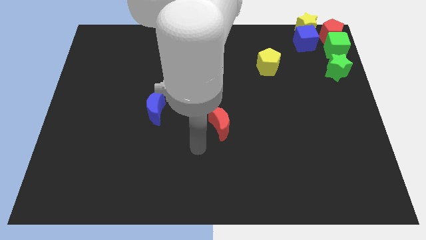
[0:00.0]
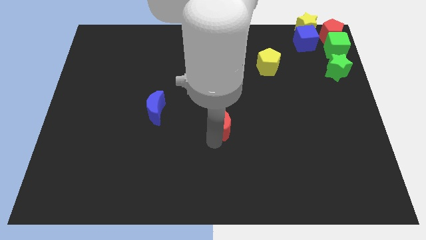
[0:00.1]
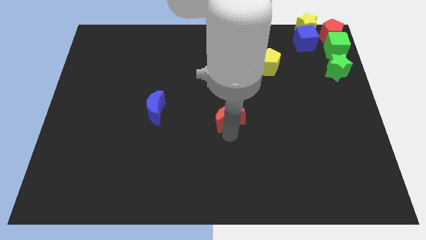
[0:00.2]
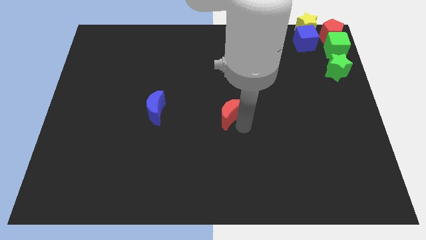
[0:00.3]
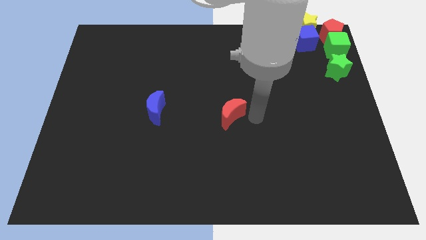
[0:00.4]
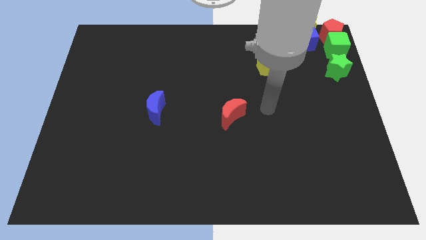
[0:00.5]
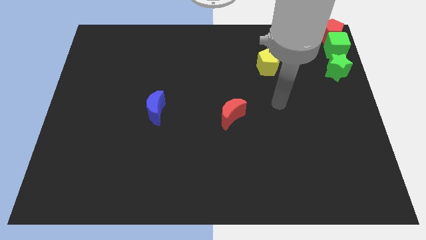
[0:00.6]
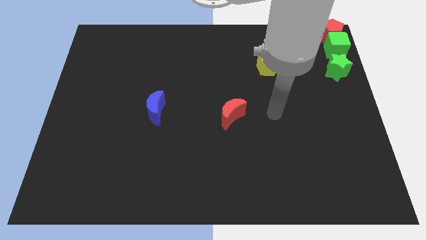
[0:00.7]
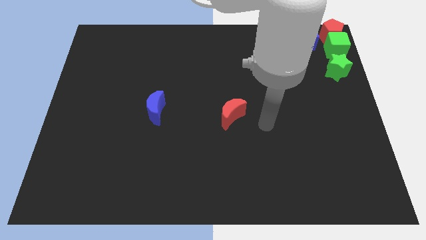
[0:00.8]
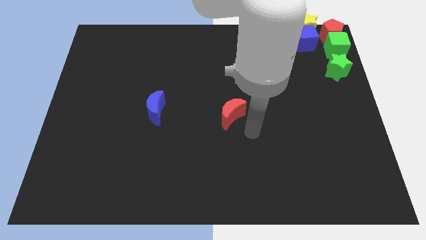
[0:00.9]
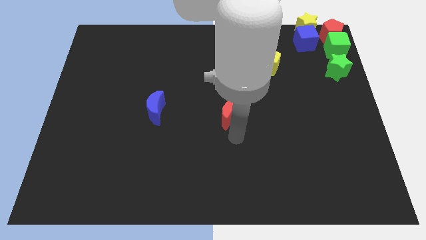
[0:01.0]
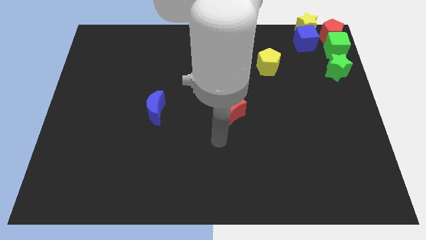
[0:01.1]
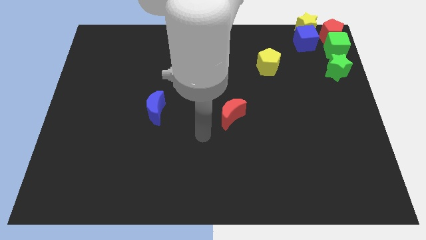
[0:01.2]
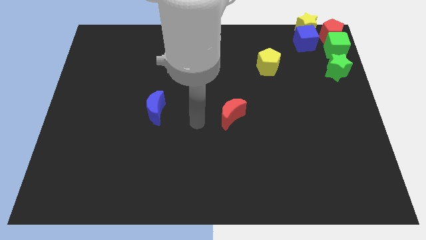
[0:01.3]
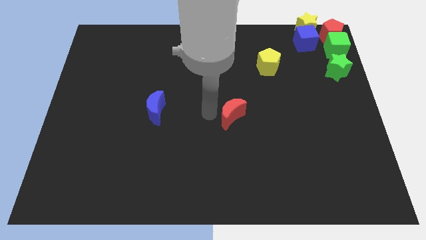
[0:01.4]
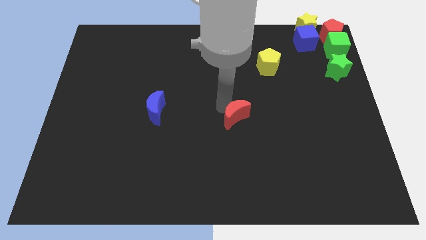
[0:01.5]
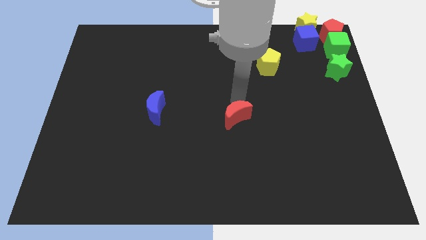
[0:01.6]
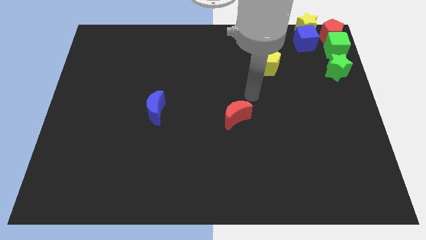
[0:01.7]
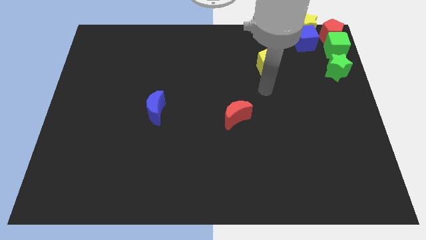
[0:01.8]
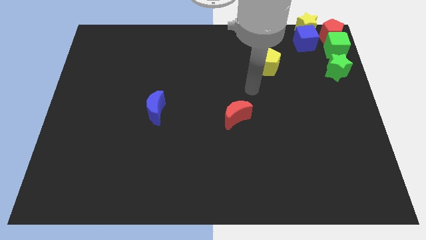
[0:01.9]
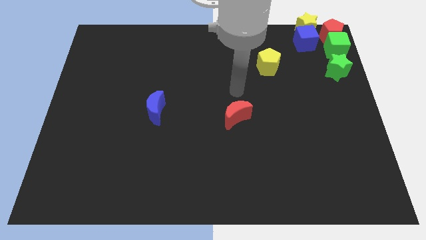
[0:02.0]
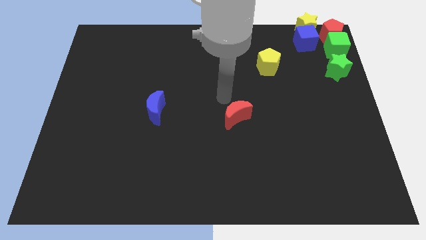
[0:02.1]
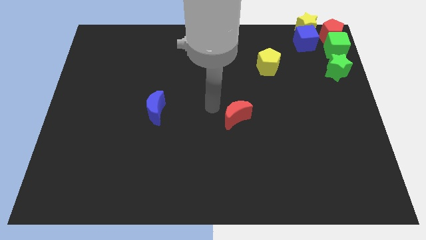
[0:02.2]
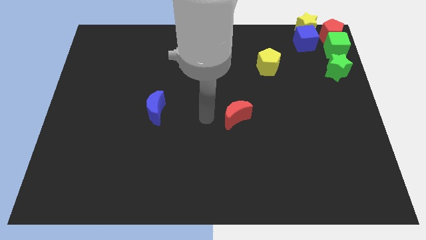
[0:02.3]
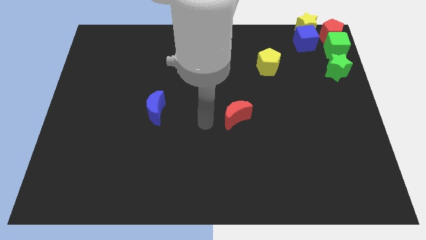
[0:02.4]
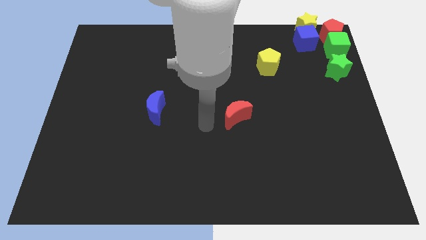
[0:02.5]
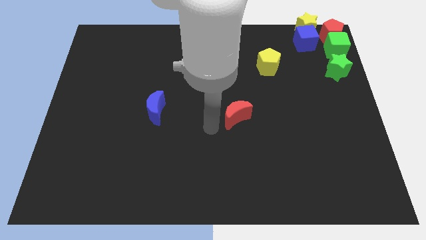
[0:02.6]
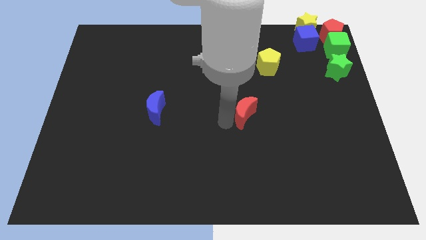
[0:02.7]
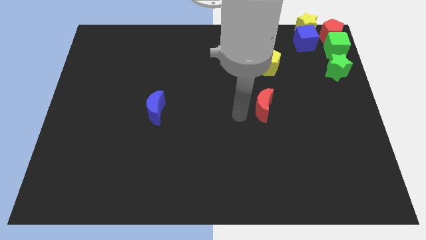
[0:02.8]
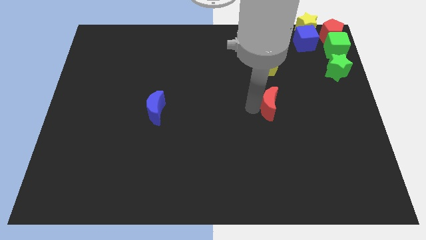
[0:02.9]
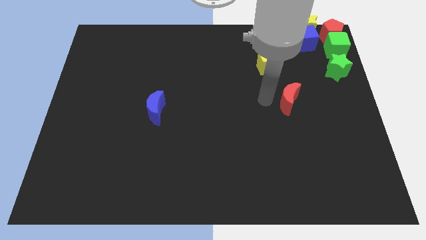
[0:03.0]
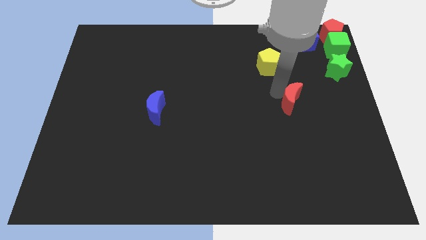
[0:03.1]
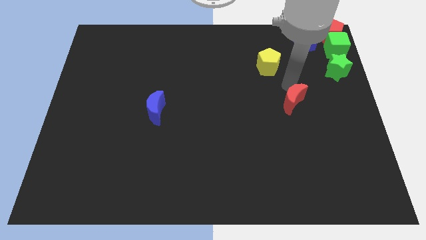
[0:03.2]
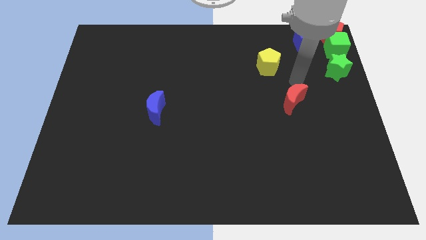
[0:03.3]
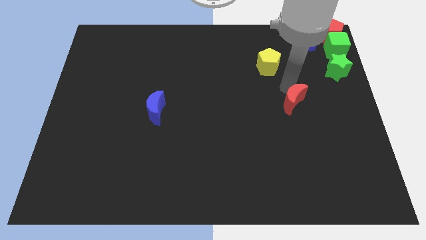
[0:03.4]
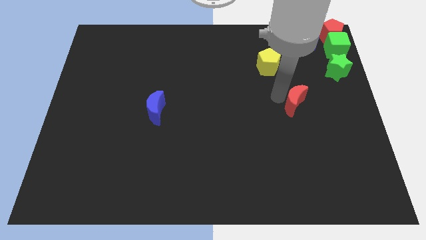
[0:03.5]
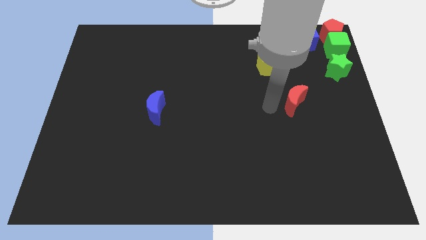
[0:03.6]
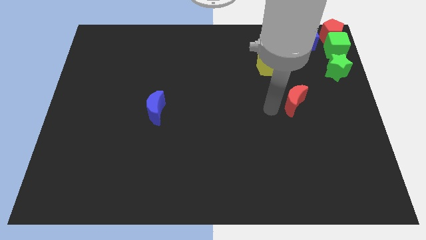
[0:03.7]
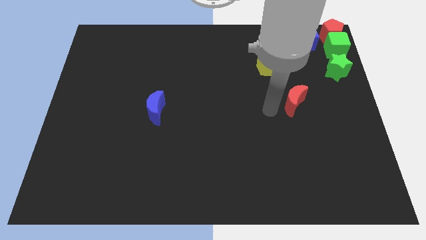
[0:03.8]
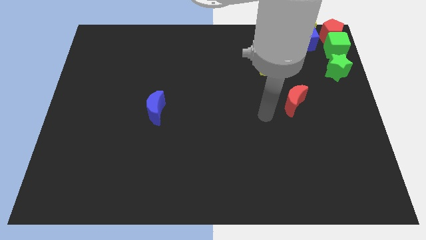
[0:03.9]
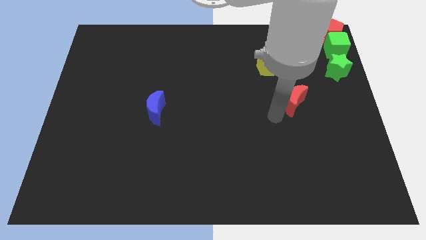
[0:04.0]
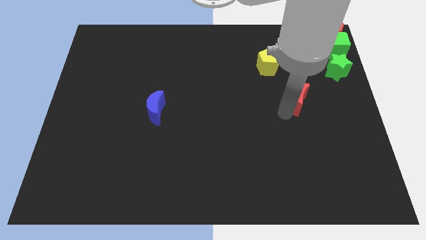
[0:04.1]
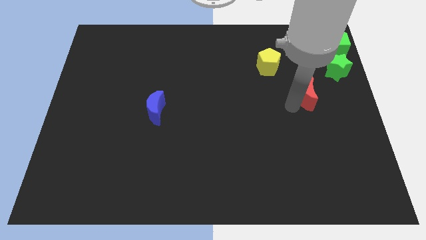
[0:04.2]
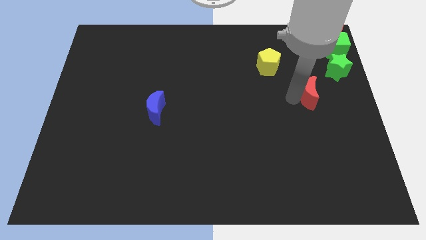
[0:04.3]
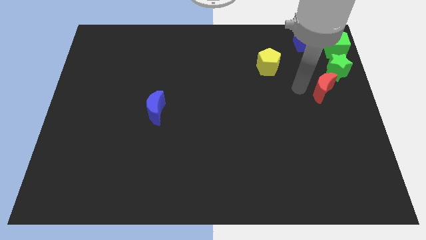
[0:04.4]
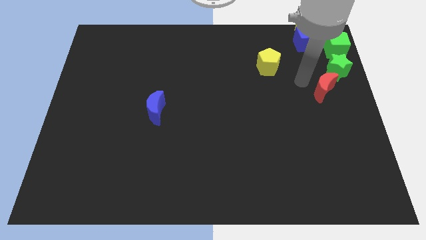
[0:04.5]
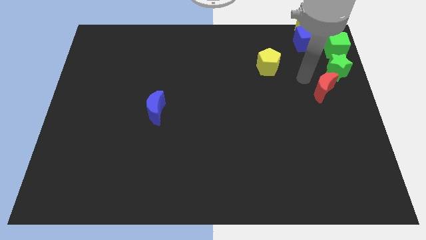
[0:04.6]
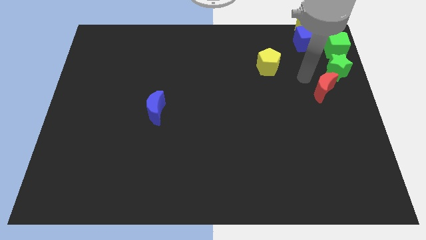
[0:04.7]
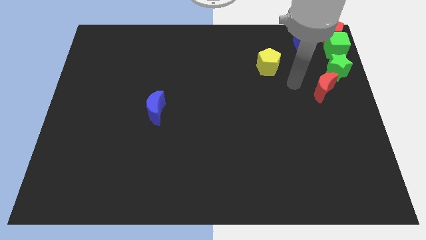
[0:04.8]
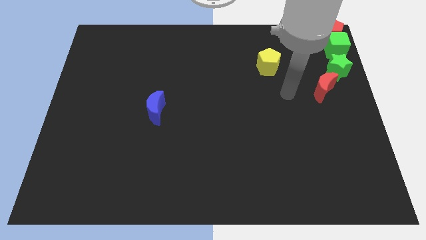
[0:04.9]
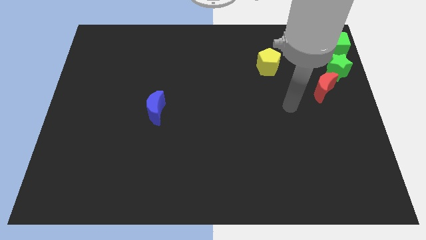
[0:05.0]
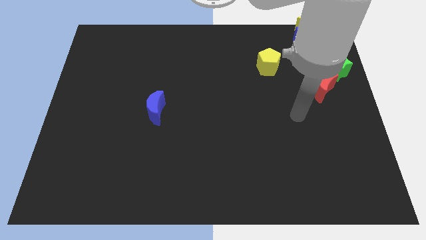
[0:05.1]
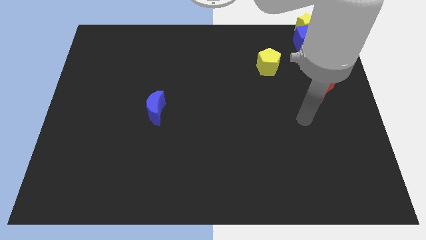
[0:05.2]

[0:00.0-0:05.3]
push the red crescent to the bottom of green star

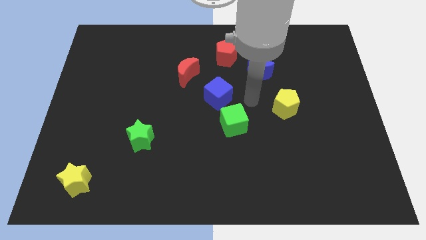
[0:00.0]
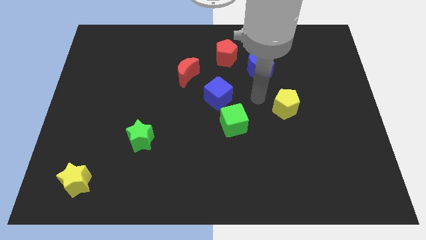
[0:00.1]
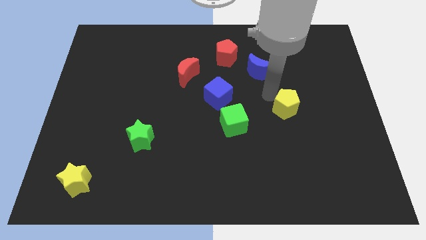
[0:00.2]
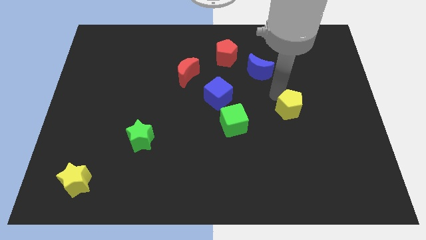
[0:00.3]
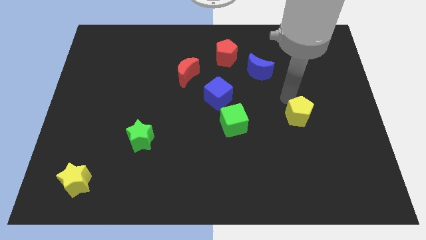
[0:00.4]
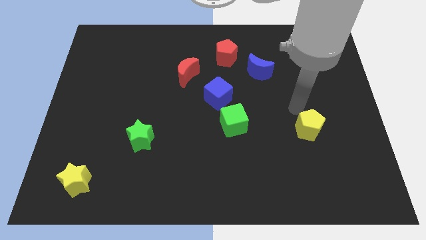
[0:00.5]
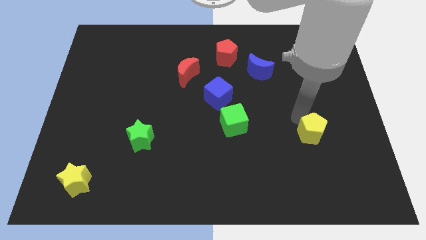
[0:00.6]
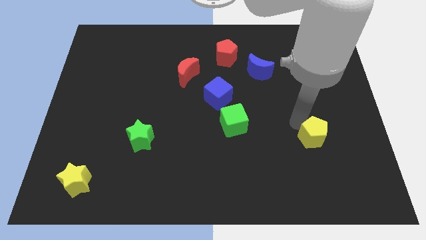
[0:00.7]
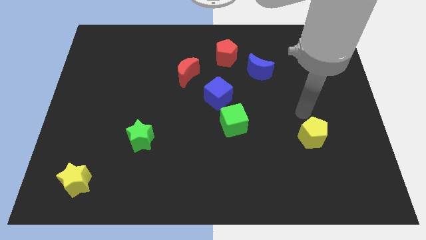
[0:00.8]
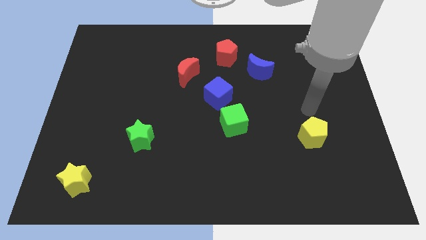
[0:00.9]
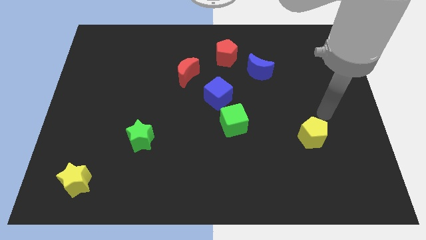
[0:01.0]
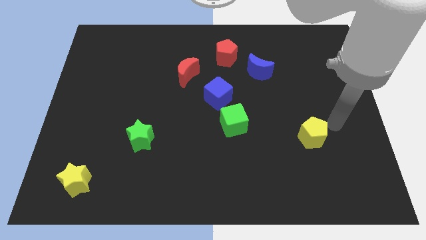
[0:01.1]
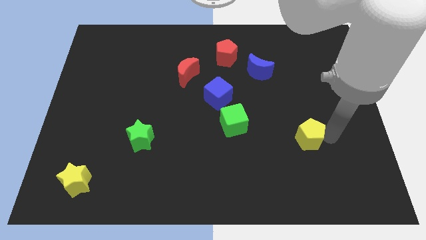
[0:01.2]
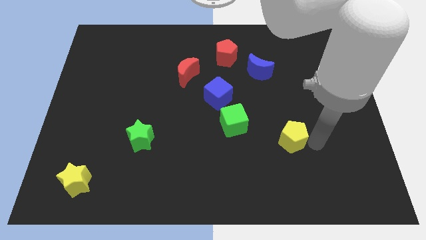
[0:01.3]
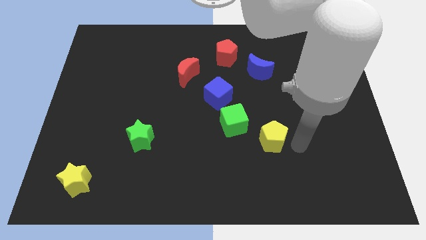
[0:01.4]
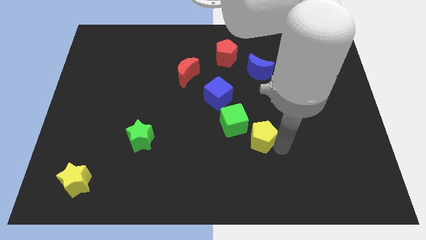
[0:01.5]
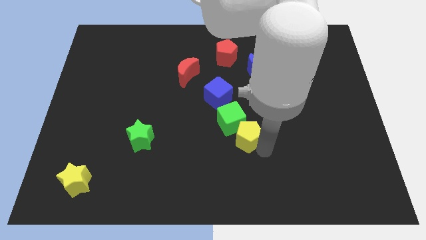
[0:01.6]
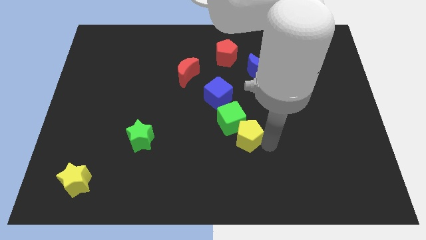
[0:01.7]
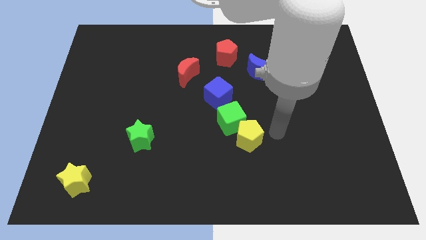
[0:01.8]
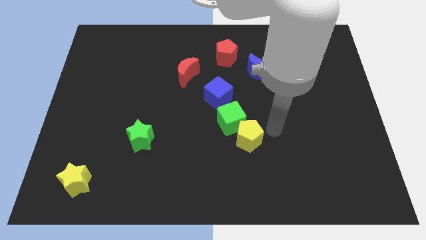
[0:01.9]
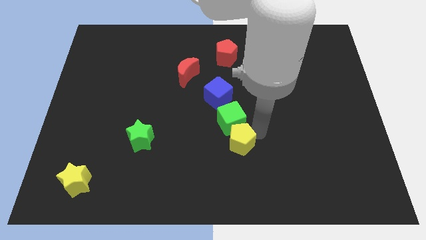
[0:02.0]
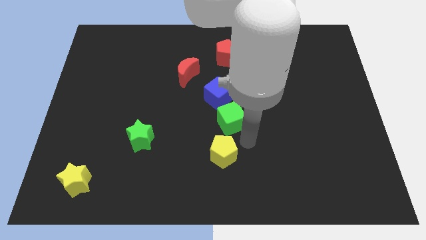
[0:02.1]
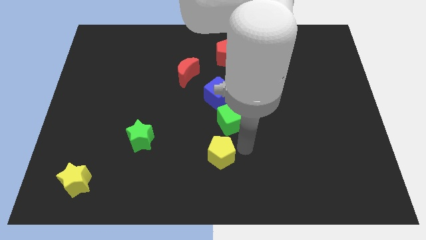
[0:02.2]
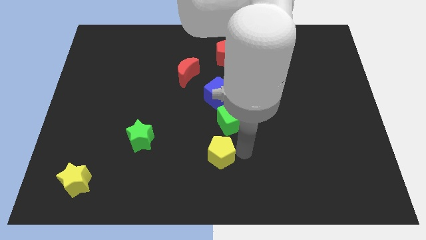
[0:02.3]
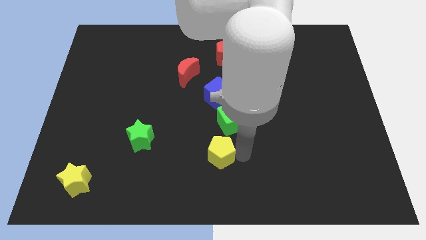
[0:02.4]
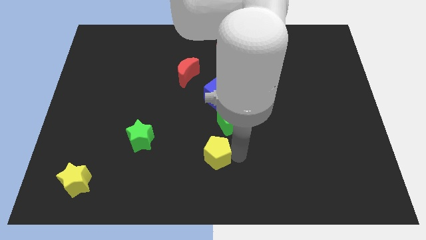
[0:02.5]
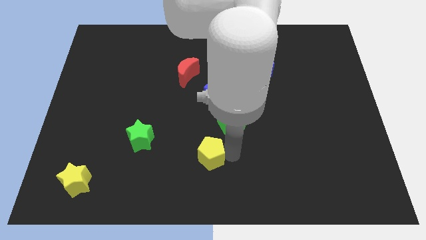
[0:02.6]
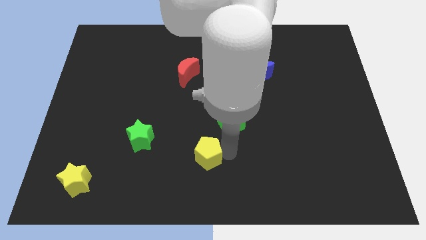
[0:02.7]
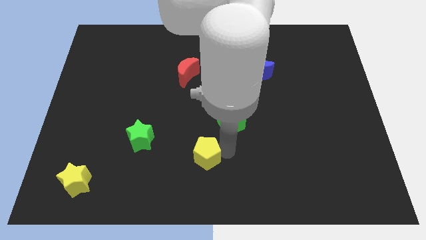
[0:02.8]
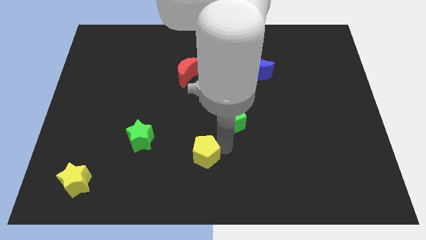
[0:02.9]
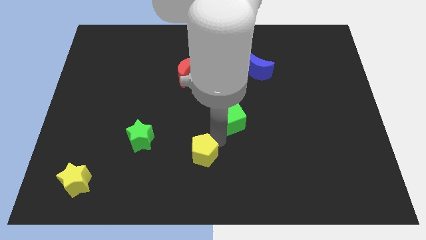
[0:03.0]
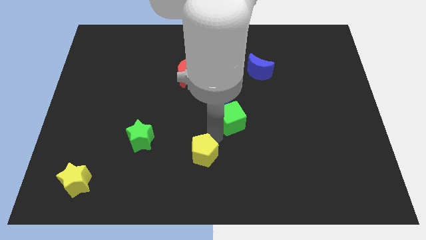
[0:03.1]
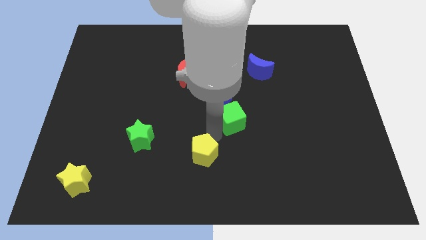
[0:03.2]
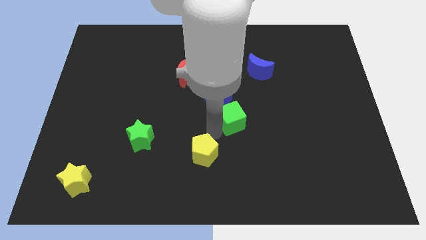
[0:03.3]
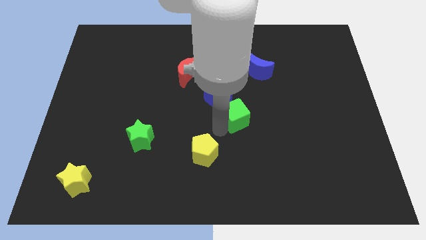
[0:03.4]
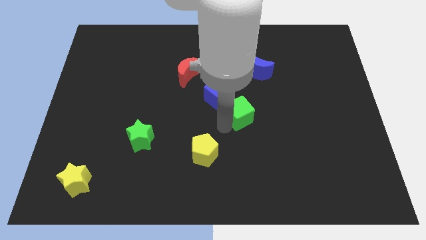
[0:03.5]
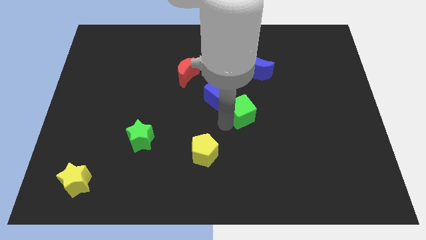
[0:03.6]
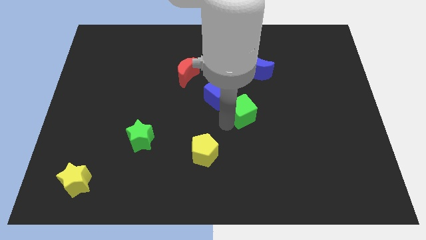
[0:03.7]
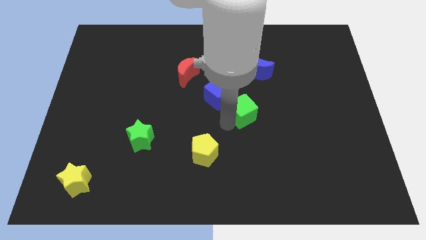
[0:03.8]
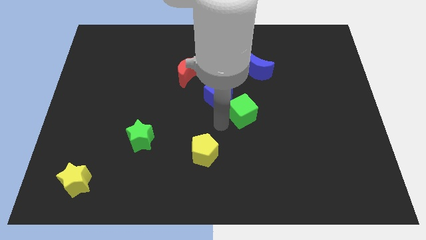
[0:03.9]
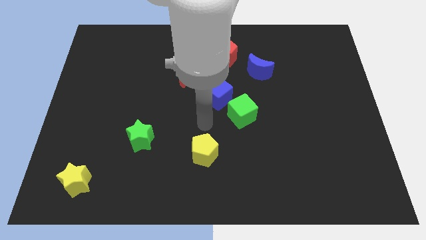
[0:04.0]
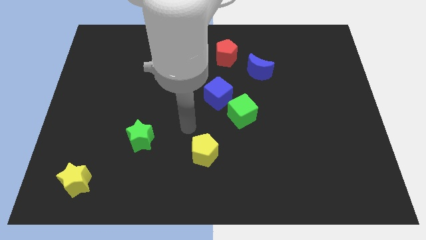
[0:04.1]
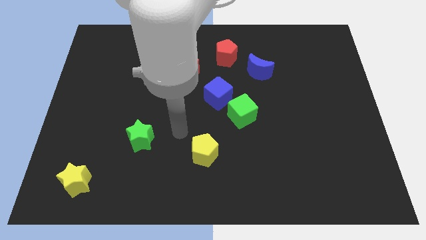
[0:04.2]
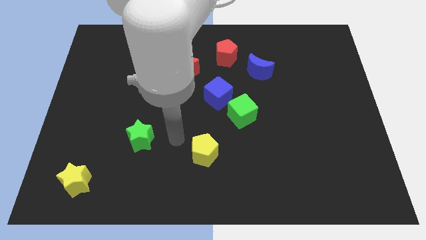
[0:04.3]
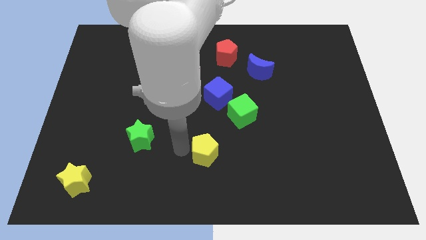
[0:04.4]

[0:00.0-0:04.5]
move the yellow pentagon to the bottom center of the board
